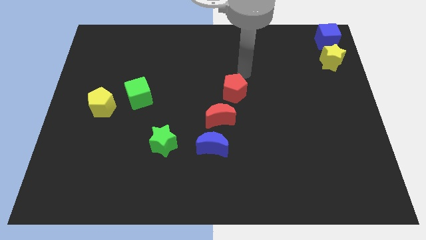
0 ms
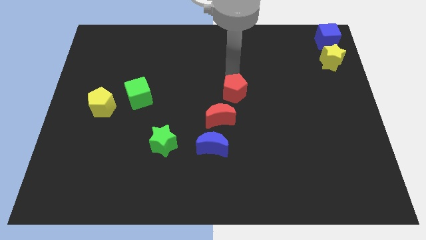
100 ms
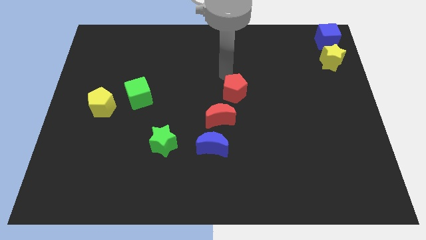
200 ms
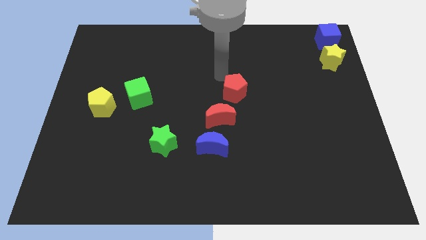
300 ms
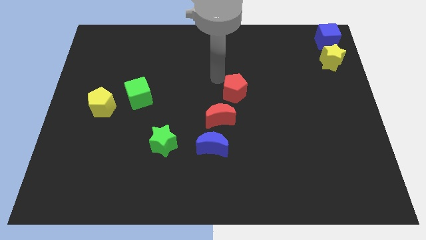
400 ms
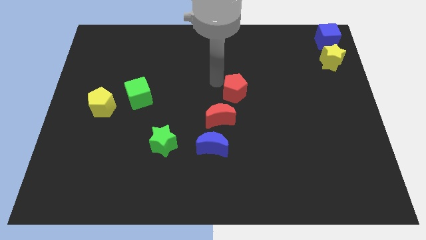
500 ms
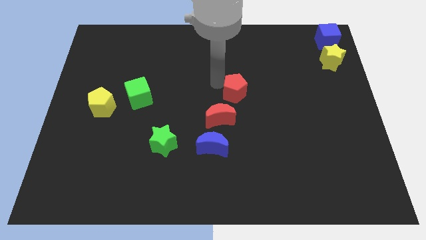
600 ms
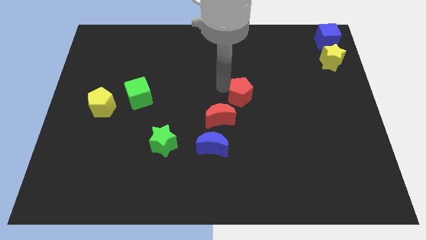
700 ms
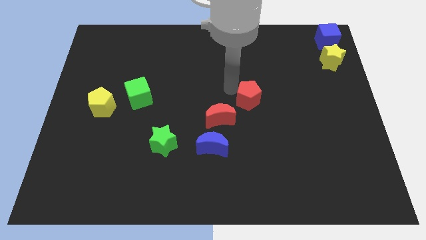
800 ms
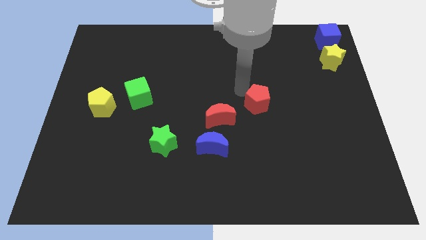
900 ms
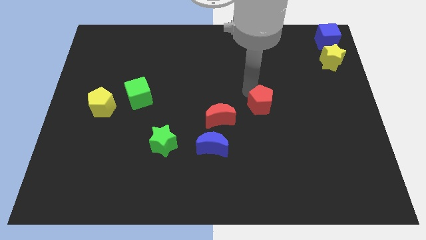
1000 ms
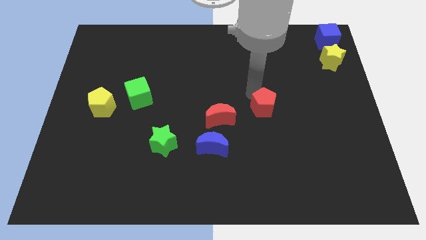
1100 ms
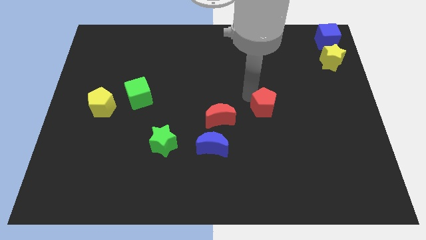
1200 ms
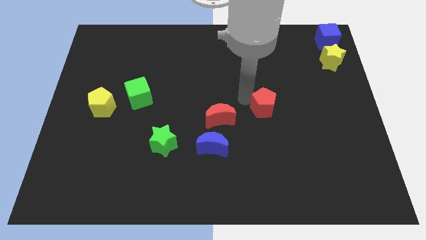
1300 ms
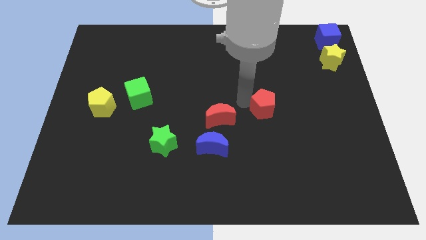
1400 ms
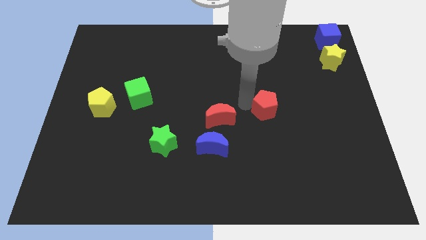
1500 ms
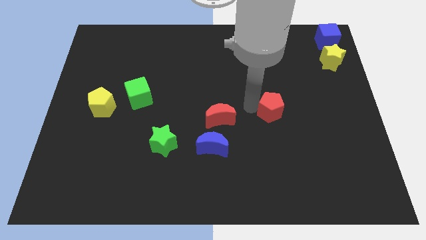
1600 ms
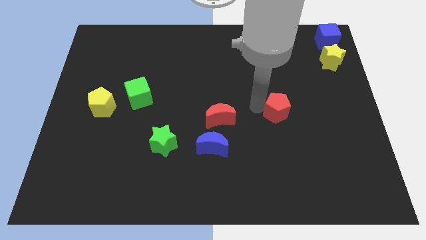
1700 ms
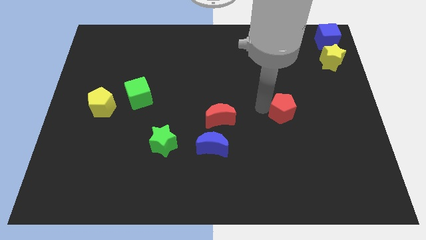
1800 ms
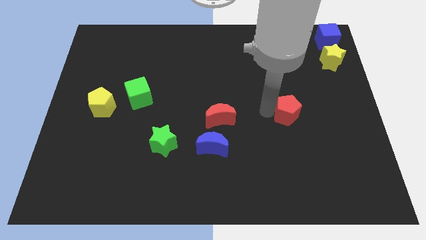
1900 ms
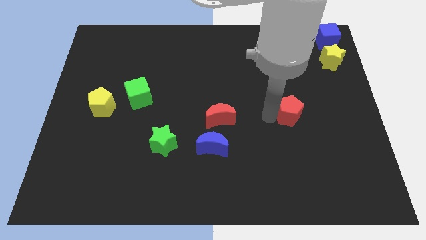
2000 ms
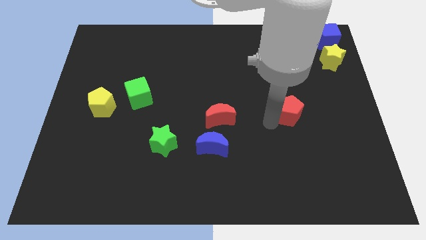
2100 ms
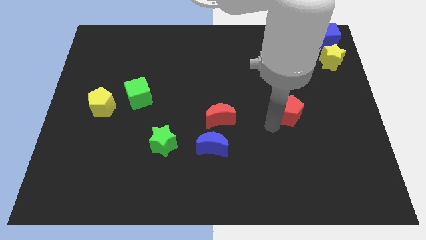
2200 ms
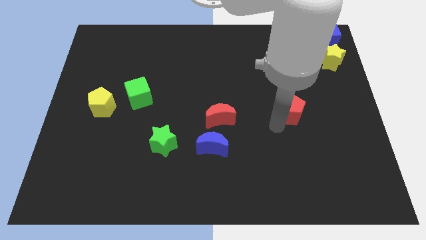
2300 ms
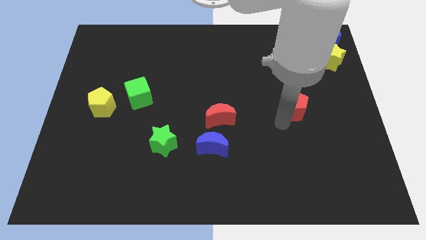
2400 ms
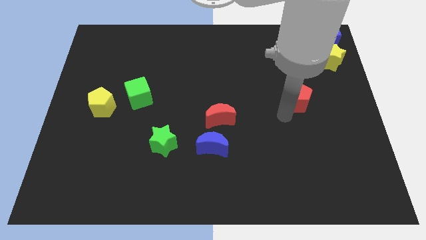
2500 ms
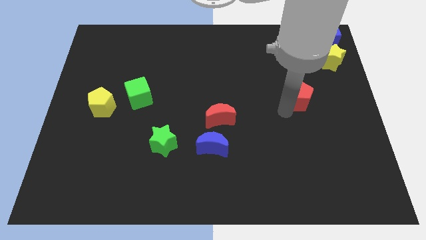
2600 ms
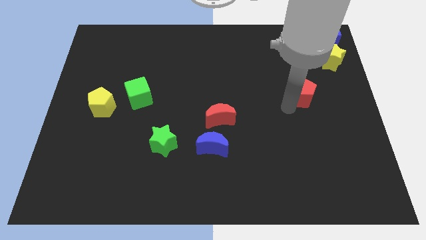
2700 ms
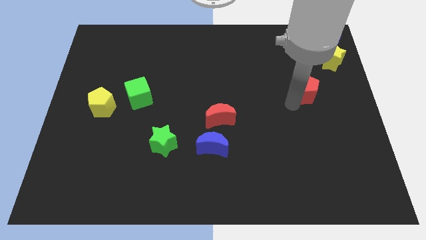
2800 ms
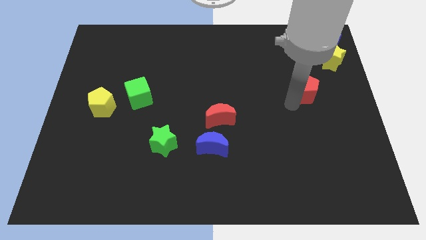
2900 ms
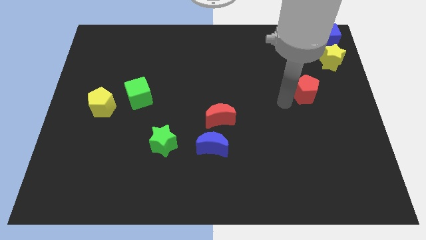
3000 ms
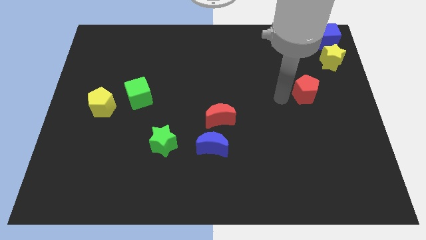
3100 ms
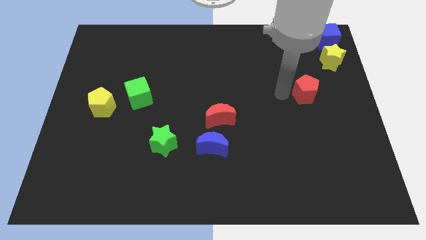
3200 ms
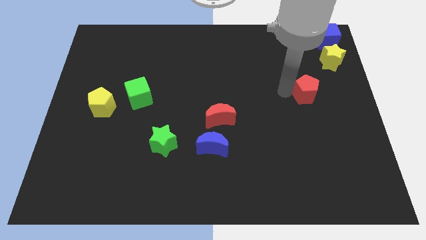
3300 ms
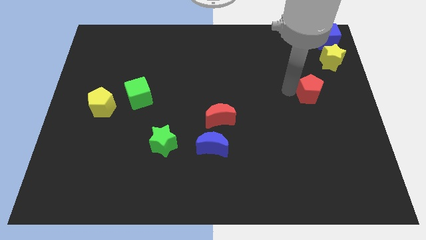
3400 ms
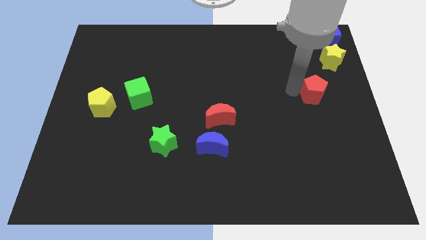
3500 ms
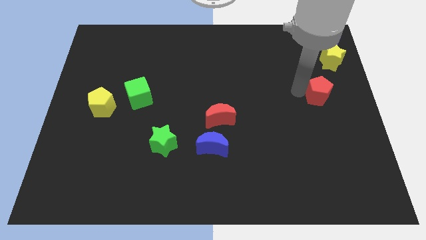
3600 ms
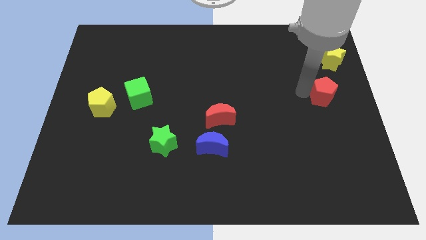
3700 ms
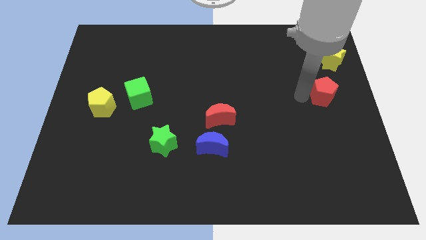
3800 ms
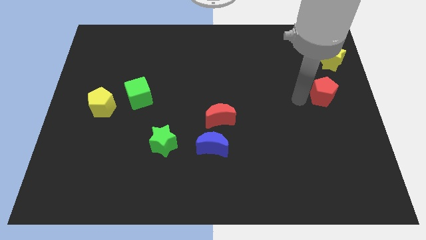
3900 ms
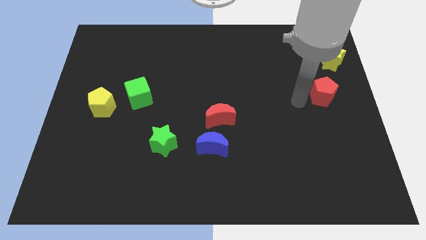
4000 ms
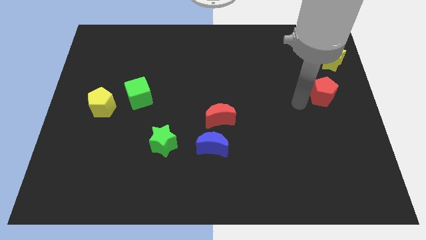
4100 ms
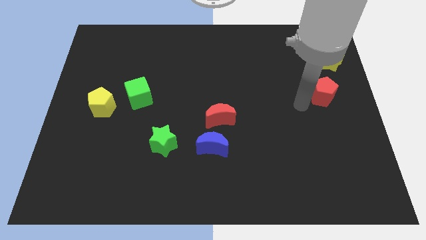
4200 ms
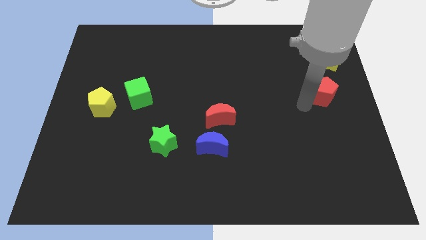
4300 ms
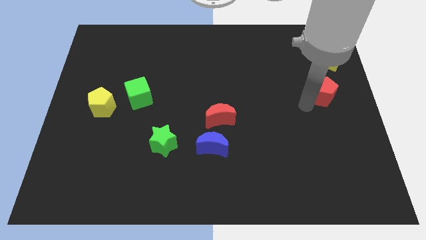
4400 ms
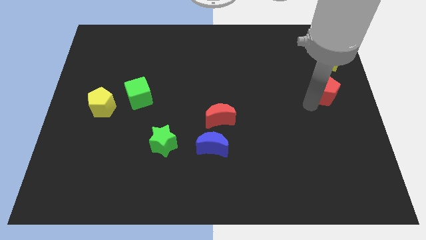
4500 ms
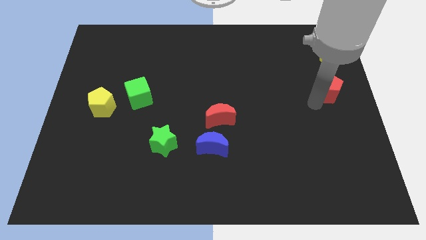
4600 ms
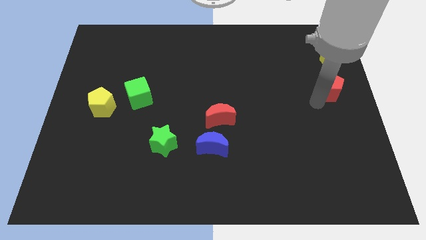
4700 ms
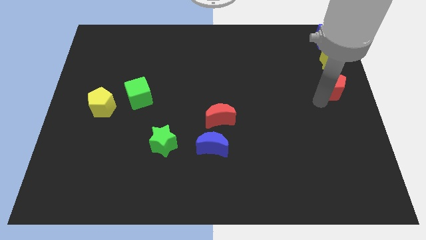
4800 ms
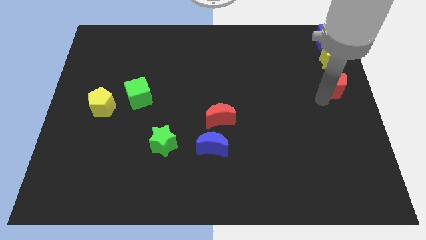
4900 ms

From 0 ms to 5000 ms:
move the red pentagon vertically below the yellow star

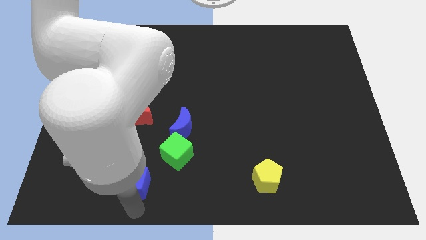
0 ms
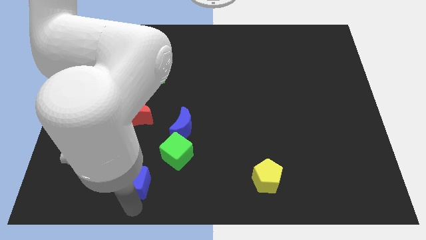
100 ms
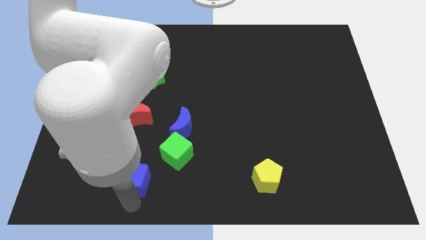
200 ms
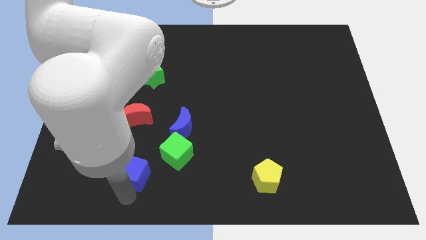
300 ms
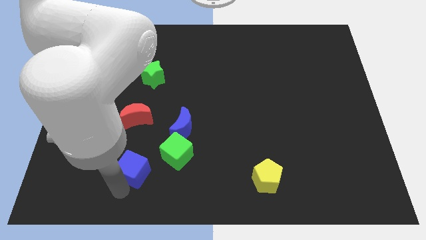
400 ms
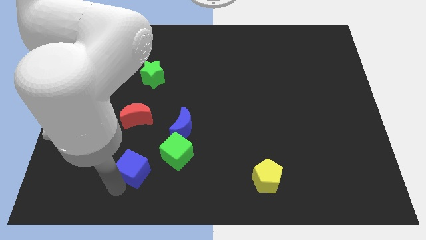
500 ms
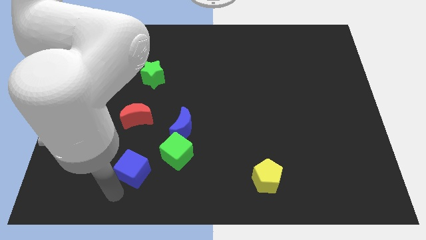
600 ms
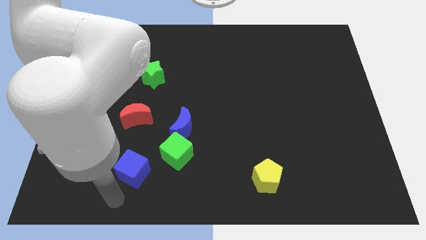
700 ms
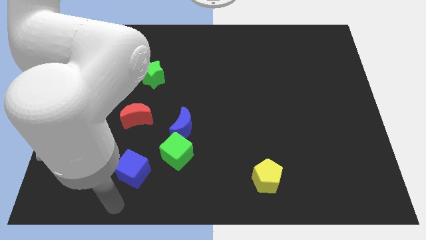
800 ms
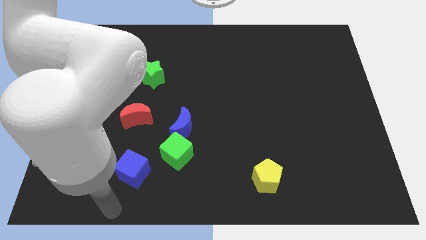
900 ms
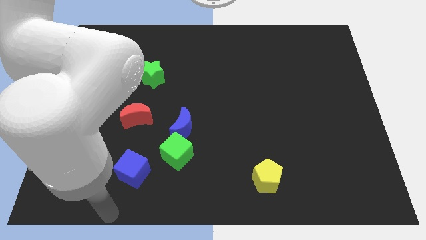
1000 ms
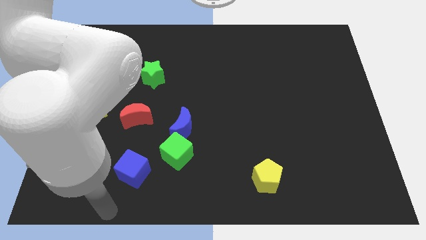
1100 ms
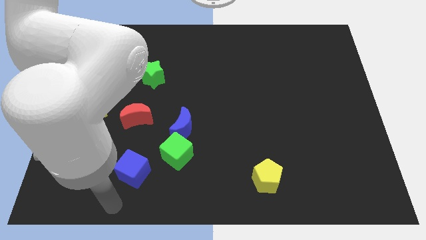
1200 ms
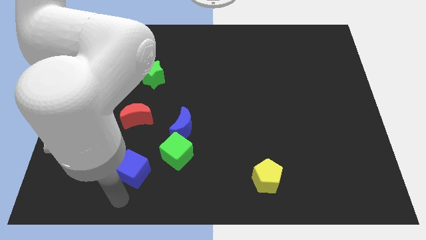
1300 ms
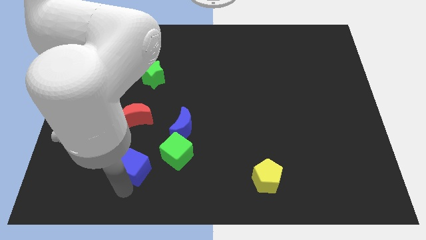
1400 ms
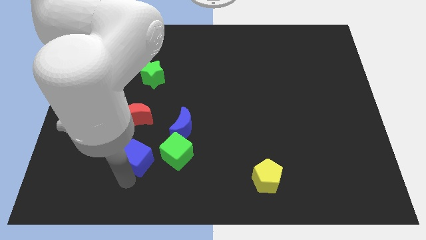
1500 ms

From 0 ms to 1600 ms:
move the blue cube to the left of the green cube

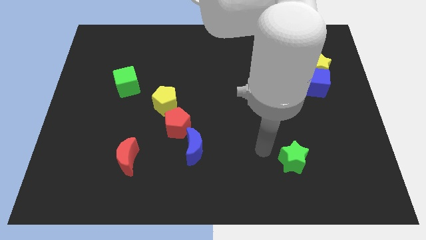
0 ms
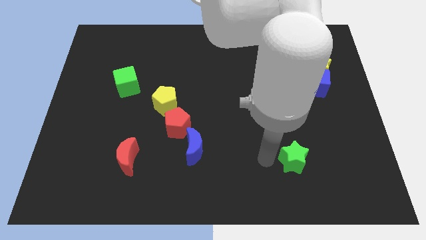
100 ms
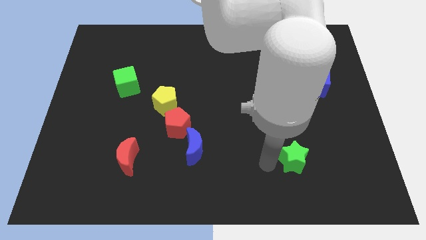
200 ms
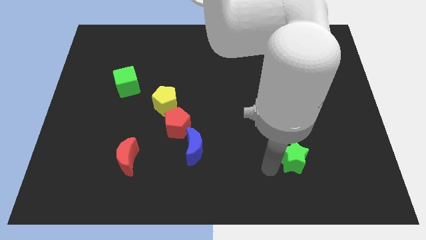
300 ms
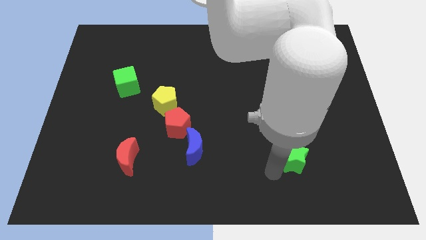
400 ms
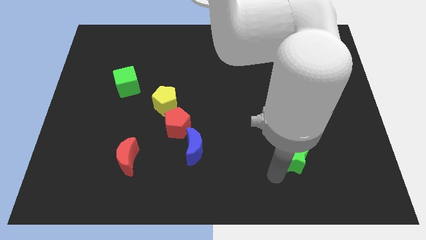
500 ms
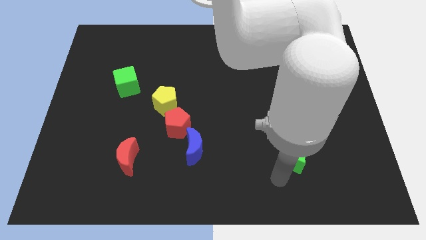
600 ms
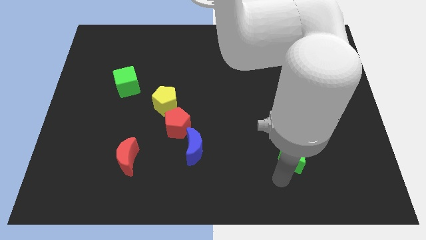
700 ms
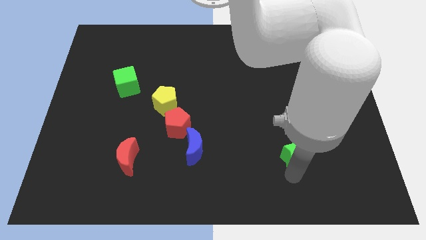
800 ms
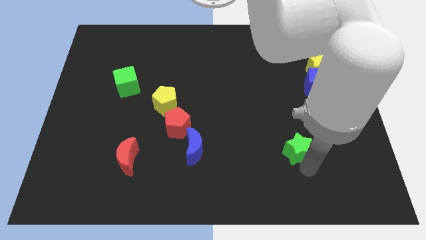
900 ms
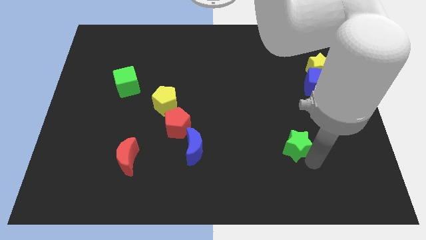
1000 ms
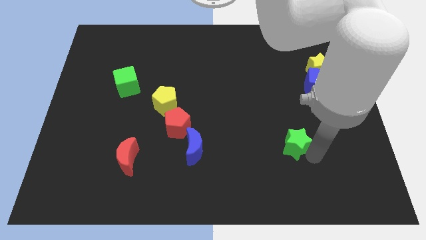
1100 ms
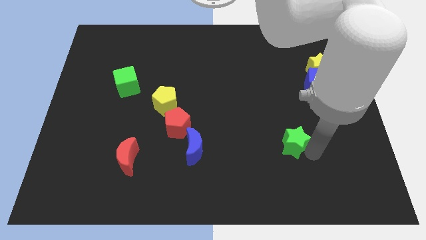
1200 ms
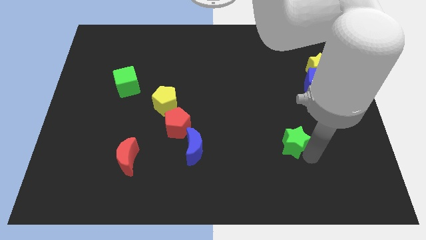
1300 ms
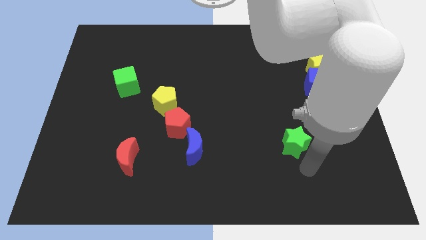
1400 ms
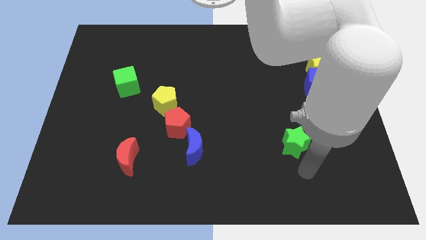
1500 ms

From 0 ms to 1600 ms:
slightly push the green star towards top

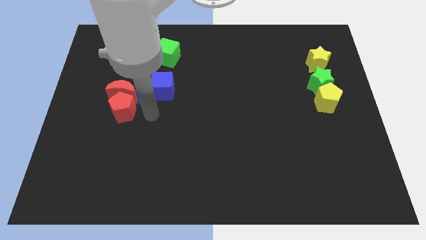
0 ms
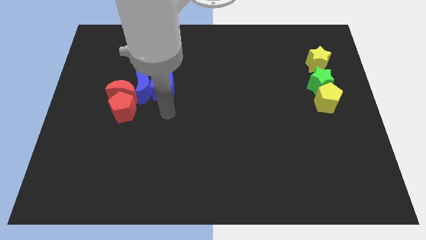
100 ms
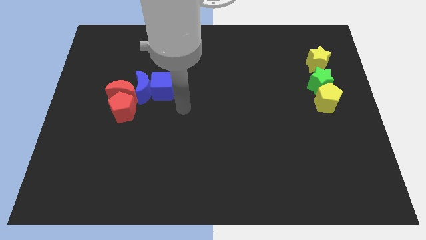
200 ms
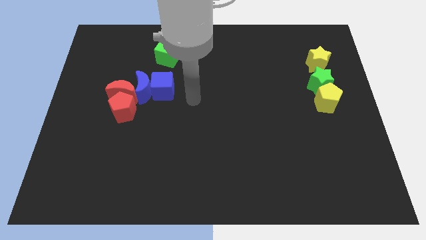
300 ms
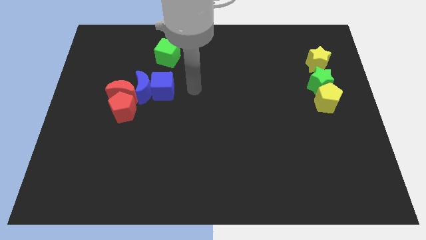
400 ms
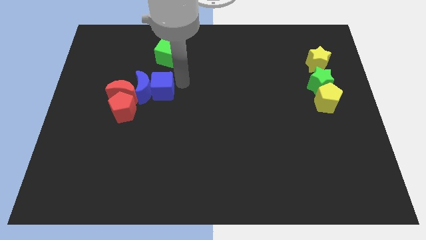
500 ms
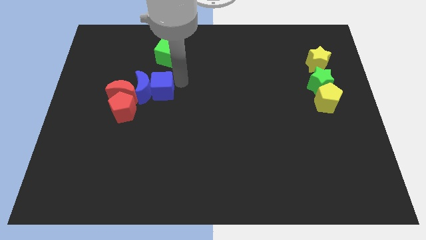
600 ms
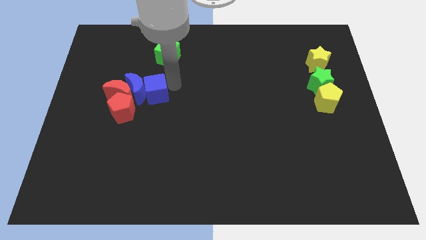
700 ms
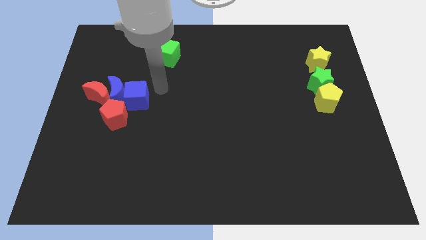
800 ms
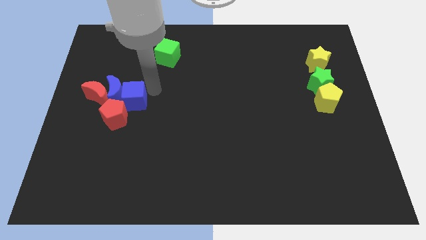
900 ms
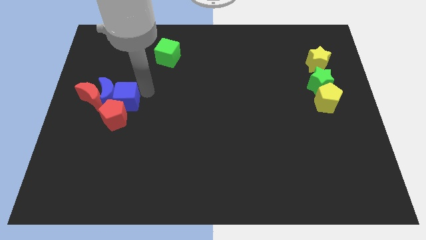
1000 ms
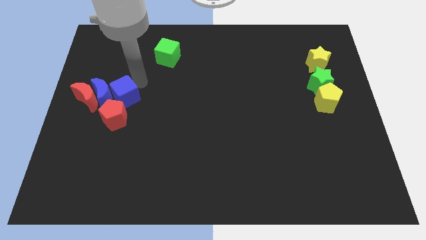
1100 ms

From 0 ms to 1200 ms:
move the blue cube to the top of red pentagon
